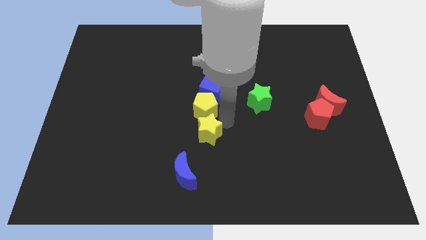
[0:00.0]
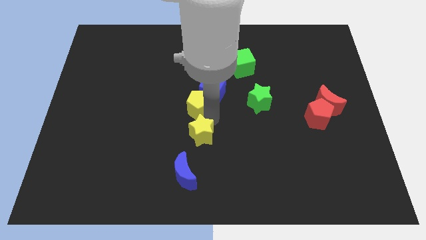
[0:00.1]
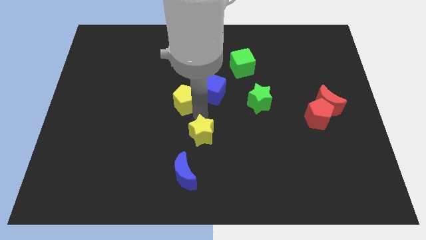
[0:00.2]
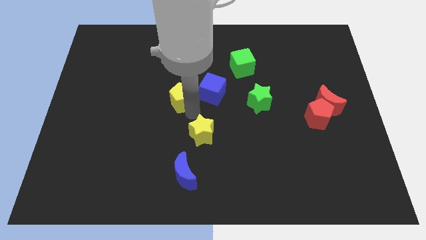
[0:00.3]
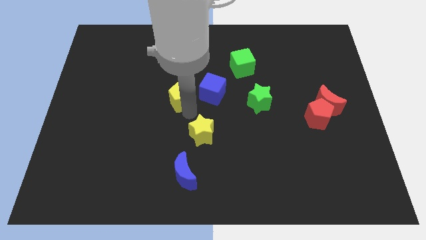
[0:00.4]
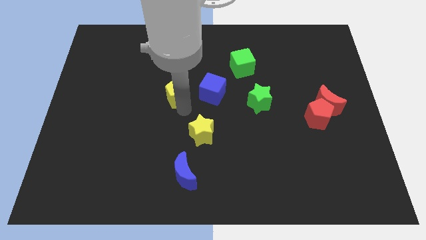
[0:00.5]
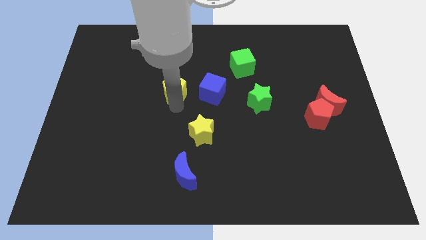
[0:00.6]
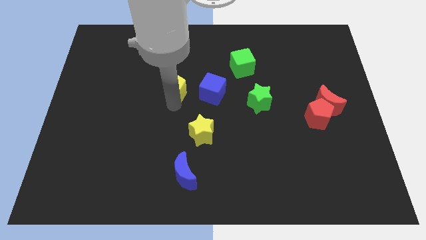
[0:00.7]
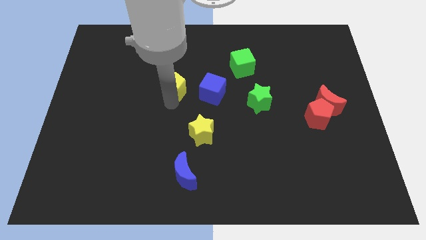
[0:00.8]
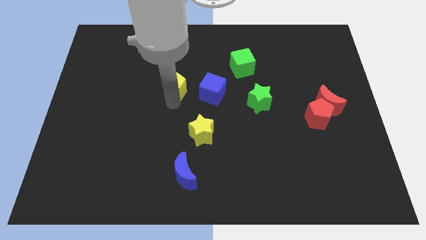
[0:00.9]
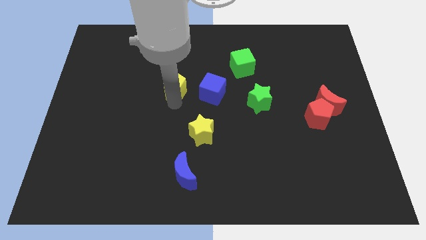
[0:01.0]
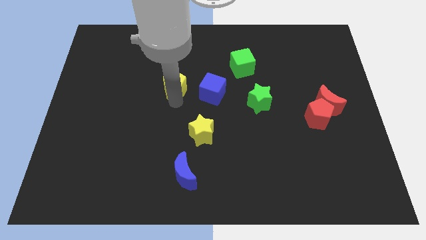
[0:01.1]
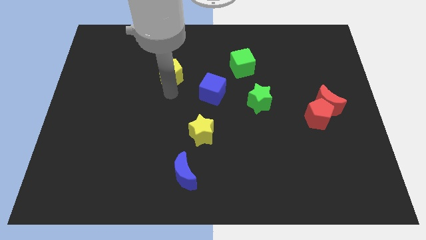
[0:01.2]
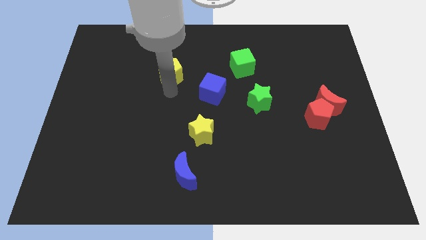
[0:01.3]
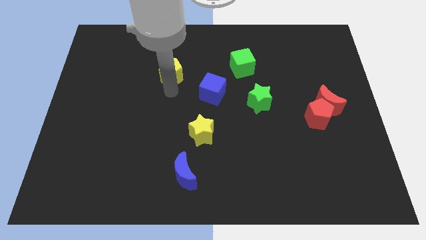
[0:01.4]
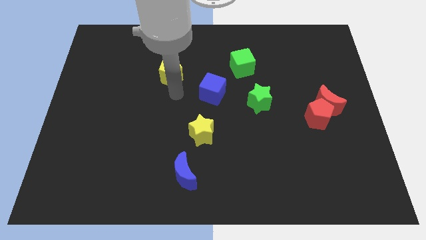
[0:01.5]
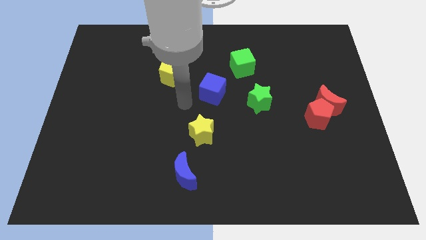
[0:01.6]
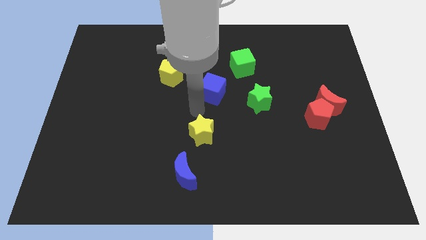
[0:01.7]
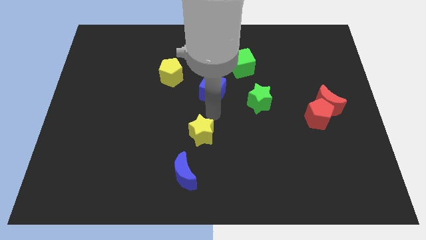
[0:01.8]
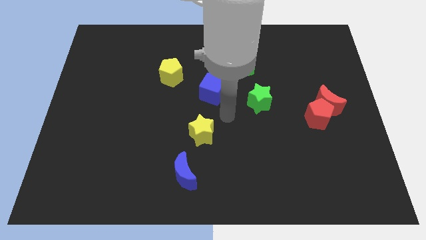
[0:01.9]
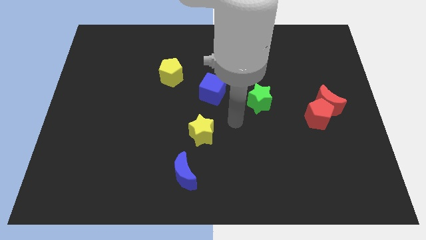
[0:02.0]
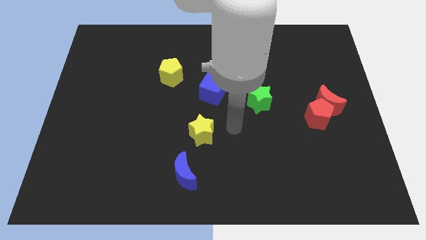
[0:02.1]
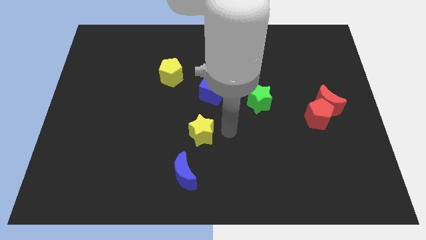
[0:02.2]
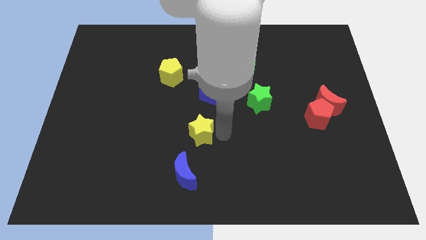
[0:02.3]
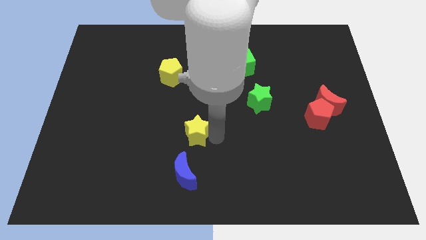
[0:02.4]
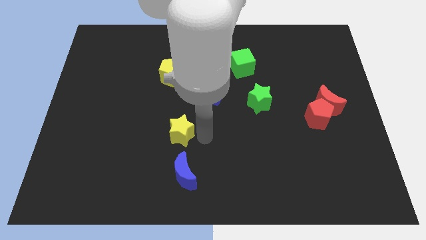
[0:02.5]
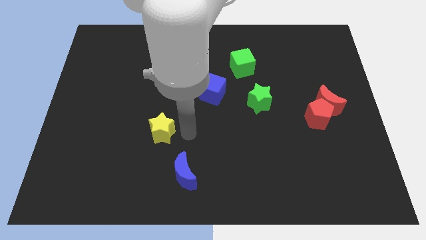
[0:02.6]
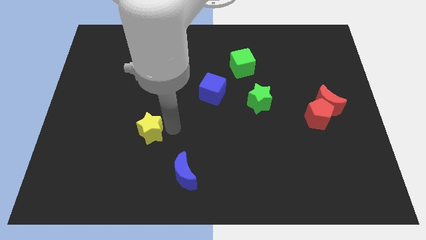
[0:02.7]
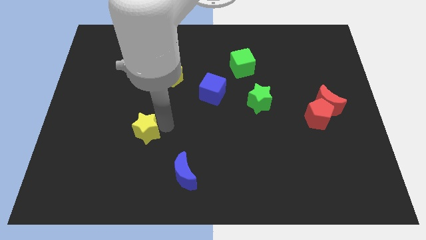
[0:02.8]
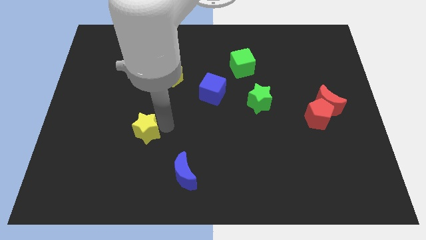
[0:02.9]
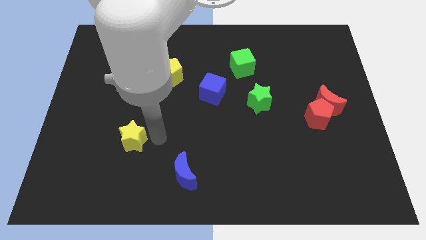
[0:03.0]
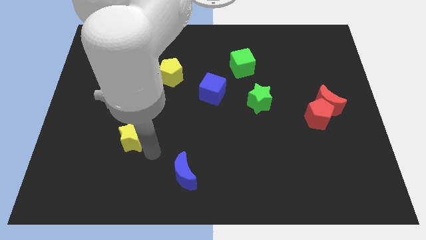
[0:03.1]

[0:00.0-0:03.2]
separate yellow pentagon from yellow star

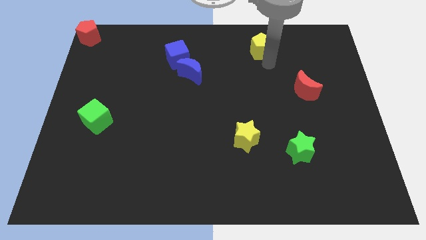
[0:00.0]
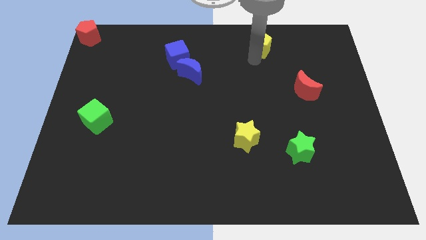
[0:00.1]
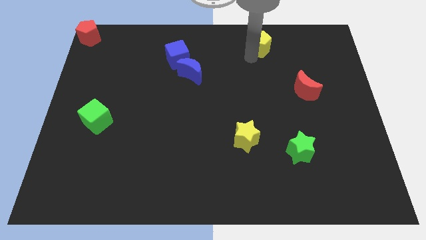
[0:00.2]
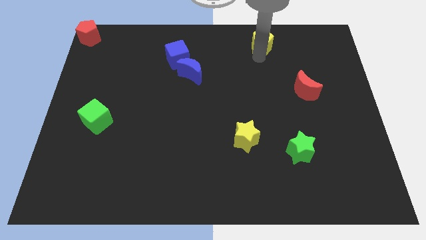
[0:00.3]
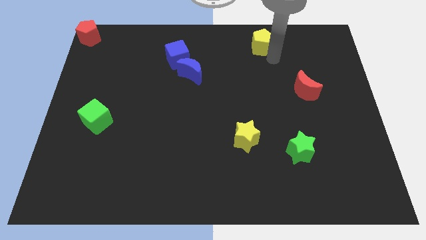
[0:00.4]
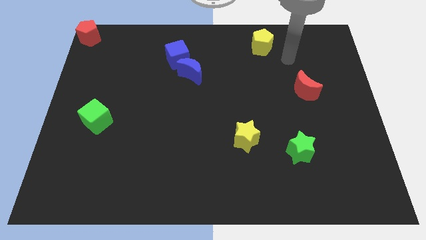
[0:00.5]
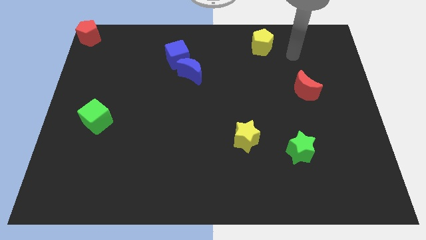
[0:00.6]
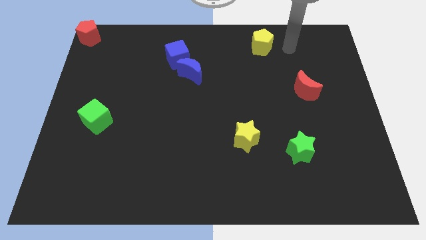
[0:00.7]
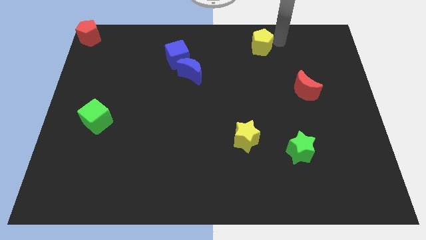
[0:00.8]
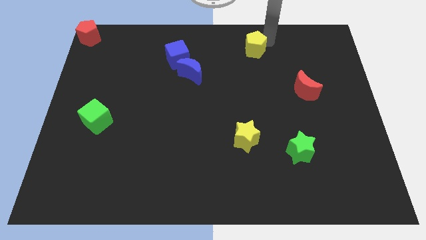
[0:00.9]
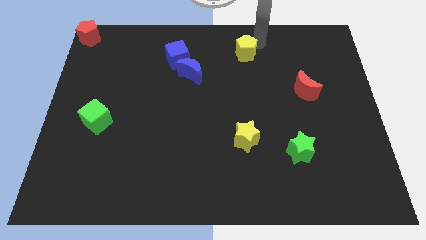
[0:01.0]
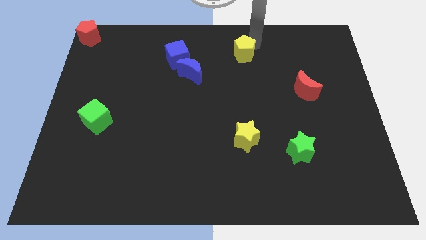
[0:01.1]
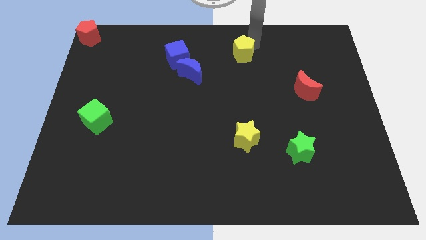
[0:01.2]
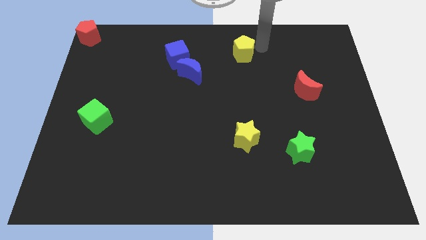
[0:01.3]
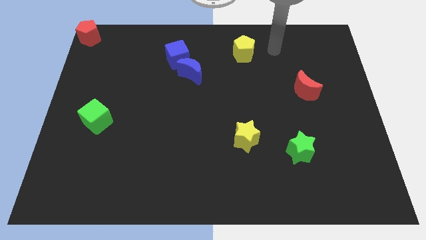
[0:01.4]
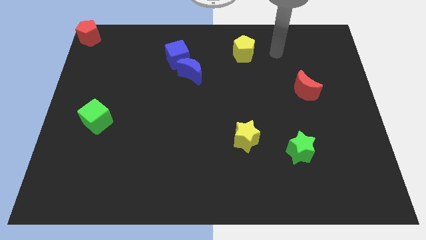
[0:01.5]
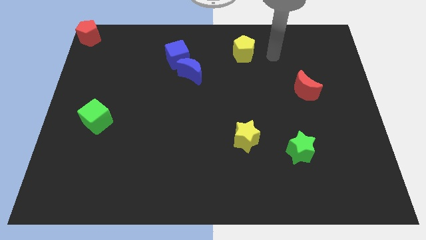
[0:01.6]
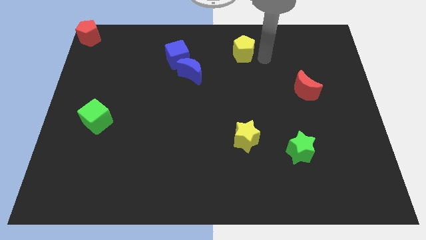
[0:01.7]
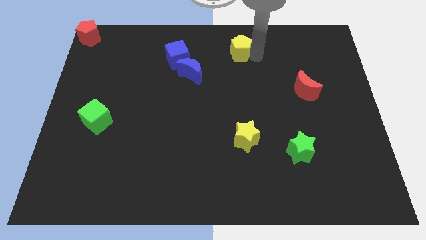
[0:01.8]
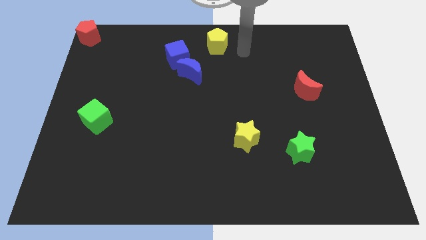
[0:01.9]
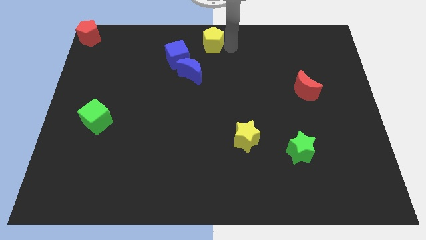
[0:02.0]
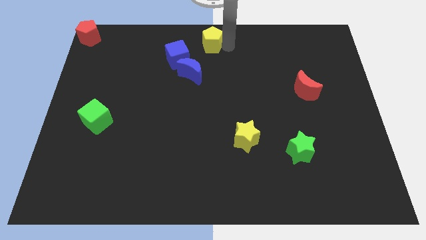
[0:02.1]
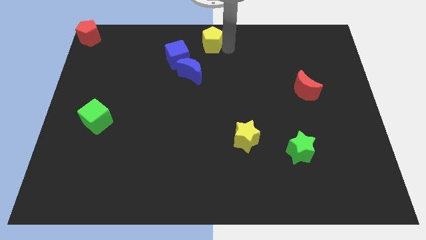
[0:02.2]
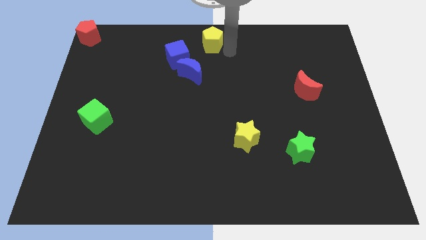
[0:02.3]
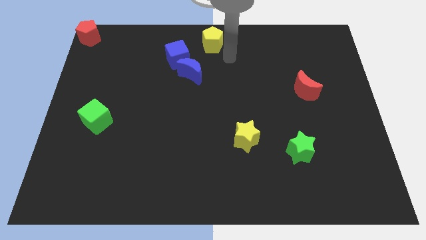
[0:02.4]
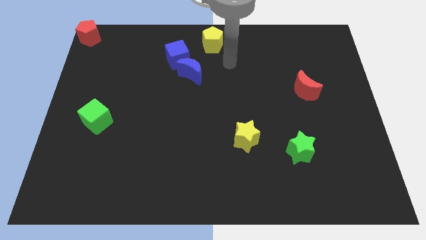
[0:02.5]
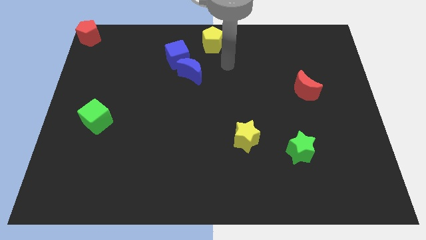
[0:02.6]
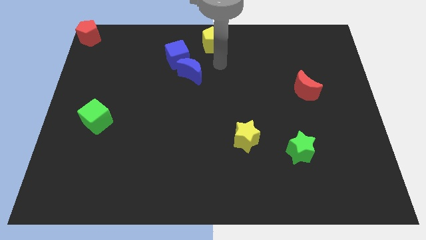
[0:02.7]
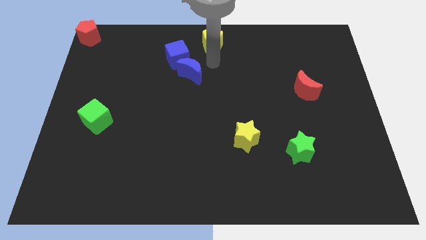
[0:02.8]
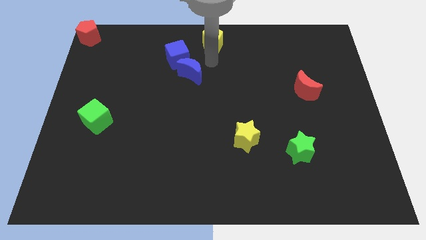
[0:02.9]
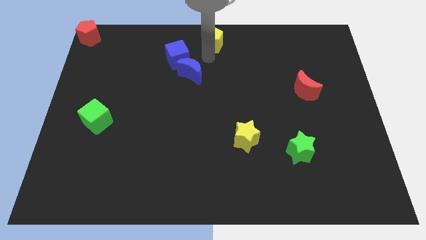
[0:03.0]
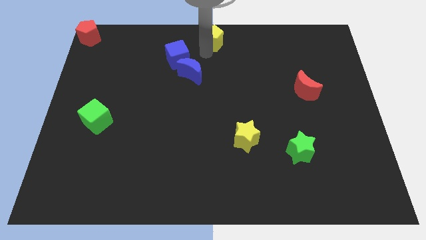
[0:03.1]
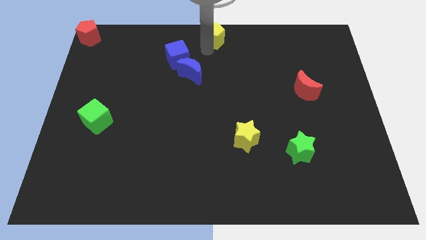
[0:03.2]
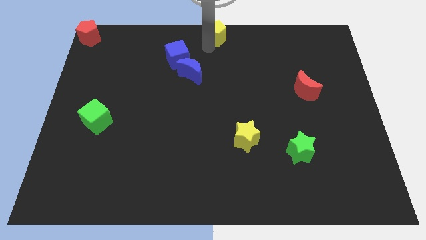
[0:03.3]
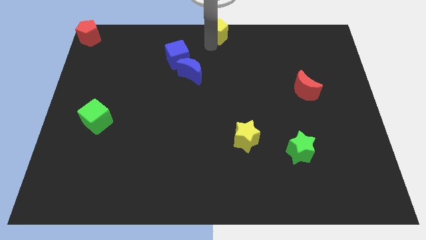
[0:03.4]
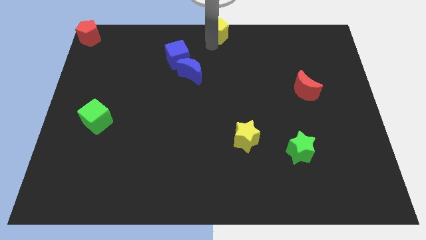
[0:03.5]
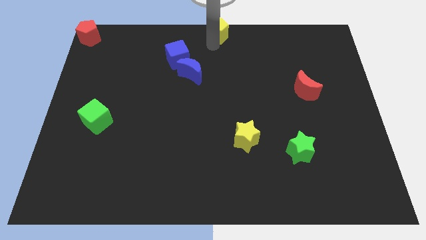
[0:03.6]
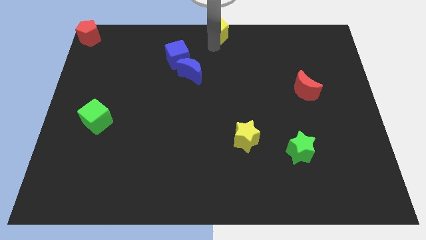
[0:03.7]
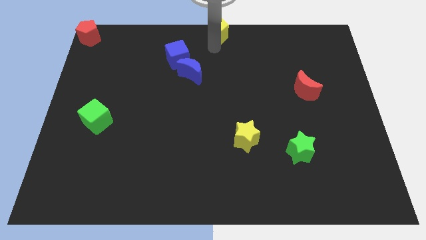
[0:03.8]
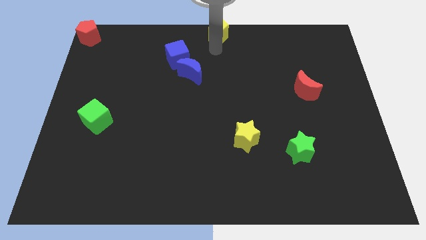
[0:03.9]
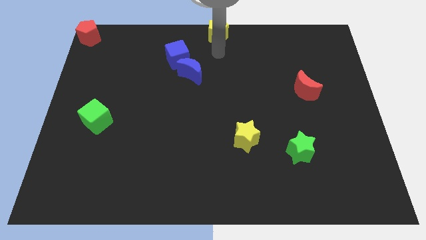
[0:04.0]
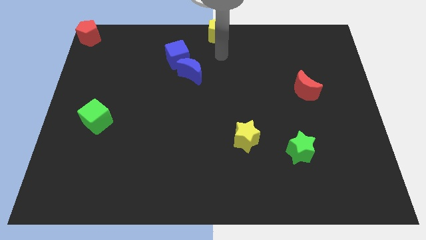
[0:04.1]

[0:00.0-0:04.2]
move the yellow pentagon to the top centre of the board

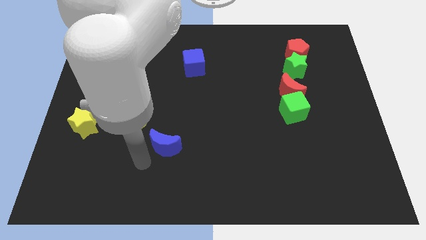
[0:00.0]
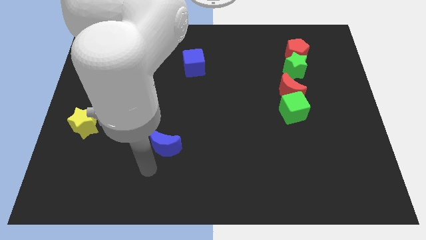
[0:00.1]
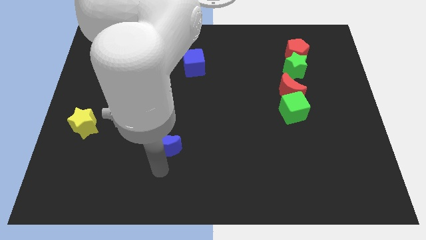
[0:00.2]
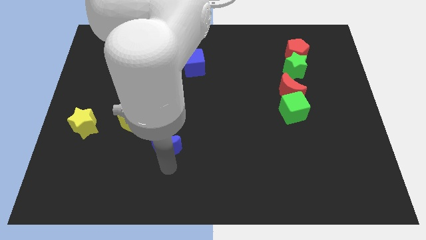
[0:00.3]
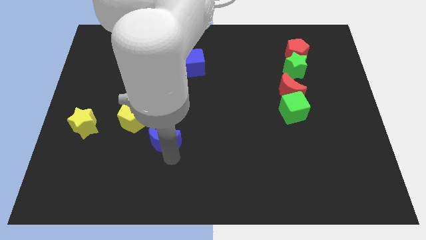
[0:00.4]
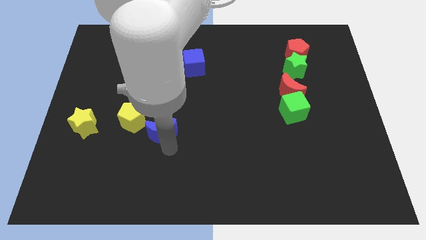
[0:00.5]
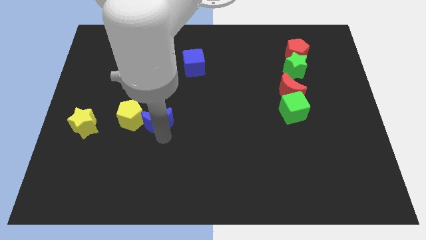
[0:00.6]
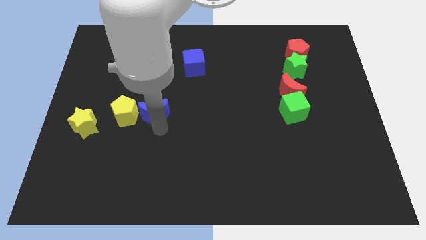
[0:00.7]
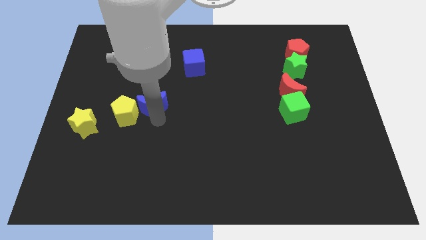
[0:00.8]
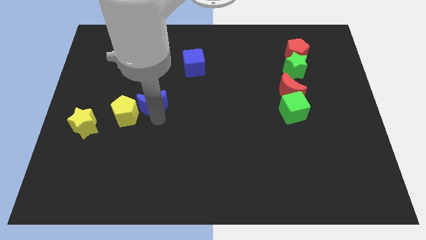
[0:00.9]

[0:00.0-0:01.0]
move the blue moon to the right of the yellow pentagon

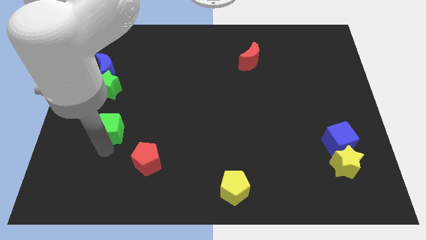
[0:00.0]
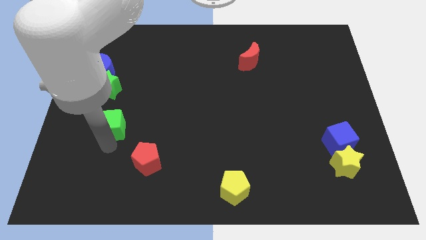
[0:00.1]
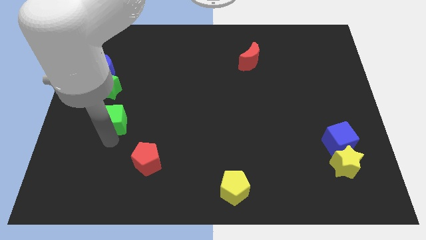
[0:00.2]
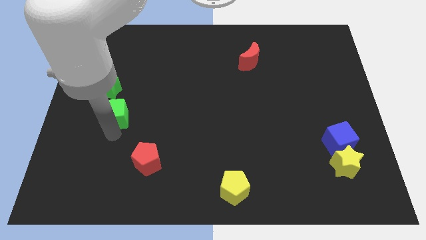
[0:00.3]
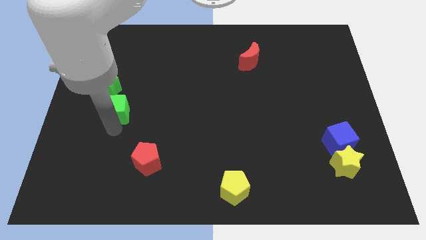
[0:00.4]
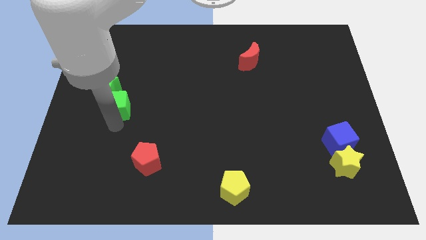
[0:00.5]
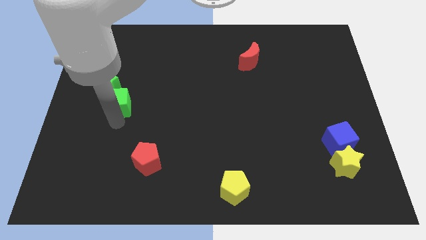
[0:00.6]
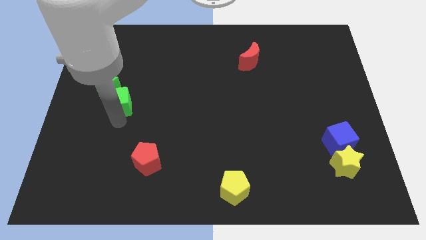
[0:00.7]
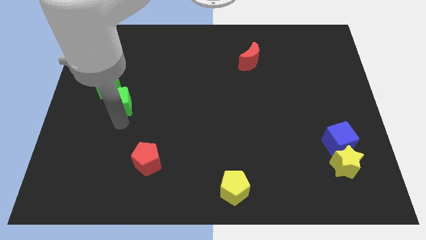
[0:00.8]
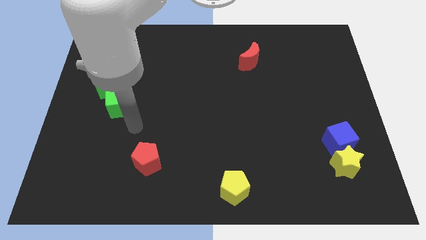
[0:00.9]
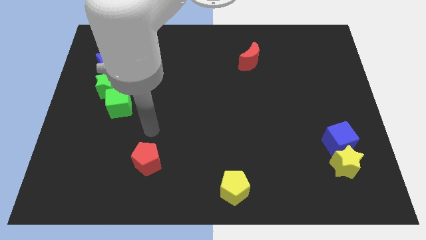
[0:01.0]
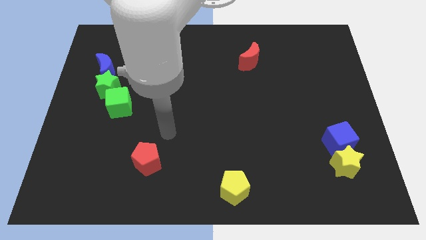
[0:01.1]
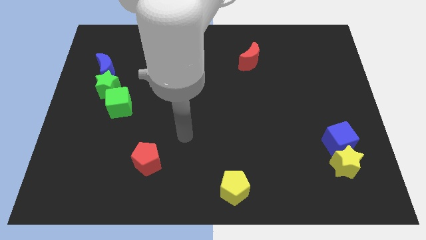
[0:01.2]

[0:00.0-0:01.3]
push the green cube into the green star
